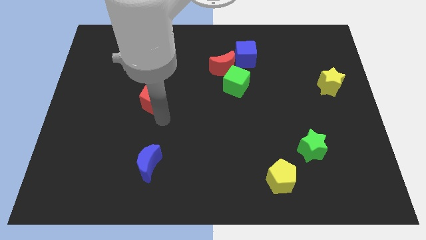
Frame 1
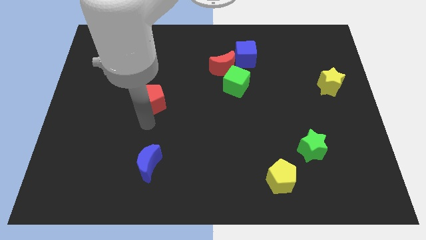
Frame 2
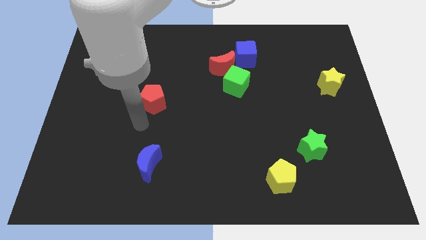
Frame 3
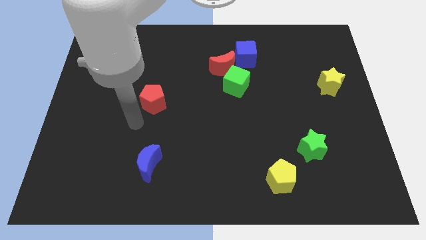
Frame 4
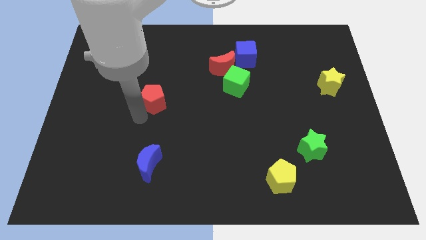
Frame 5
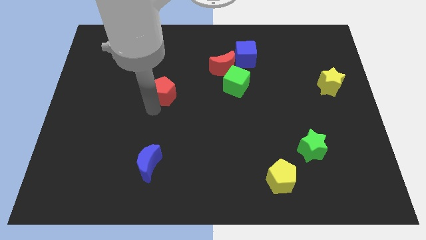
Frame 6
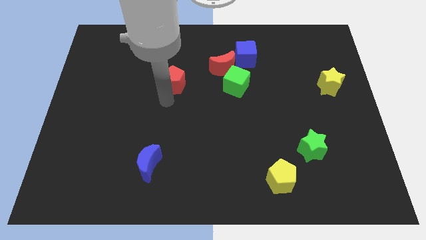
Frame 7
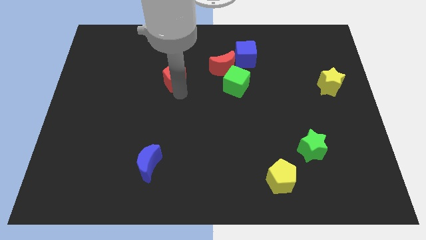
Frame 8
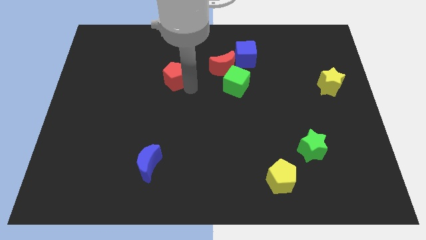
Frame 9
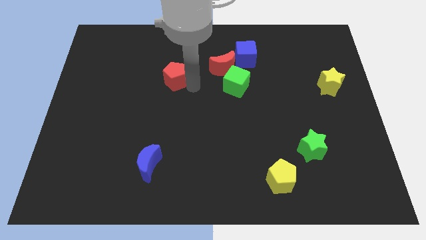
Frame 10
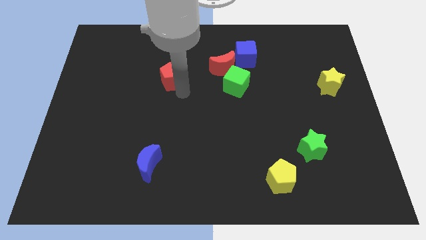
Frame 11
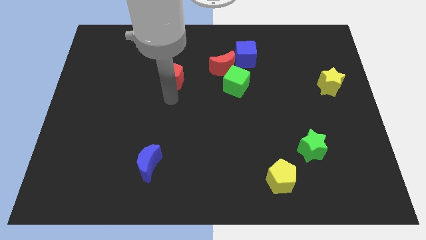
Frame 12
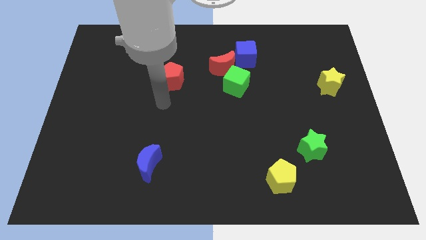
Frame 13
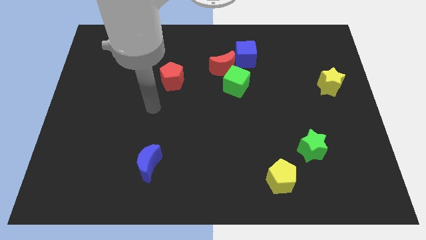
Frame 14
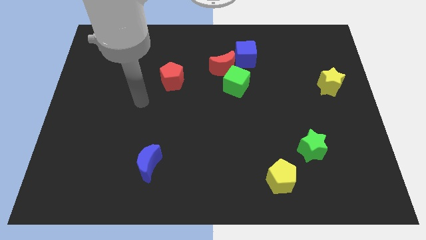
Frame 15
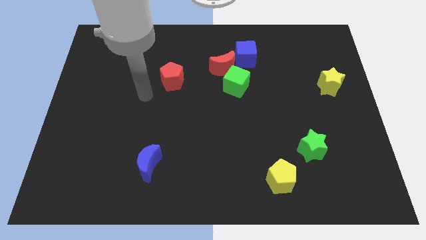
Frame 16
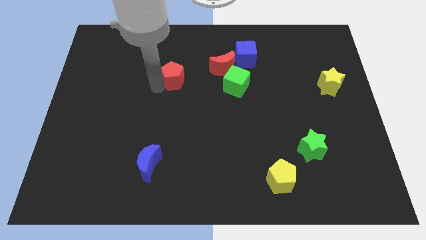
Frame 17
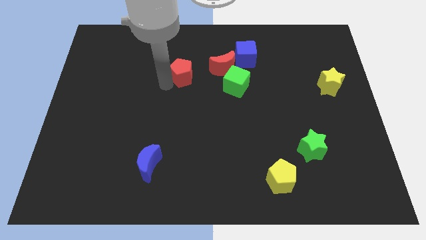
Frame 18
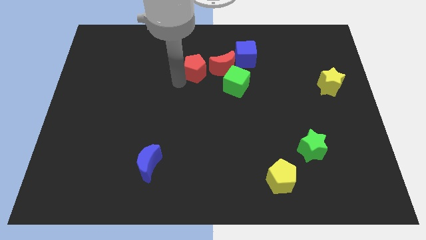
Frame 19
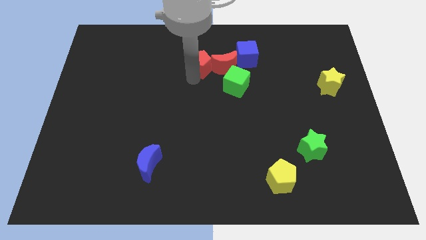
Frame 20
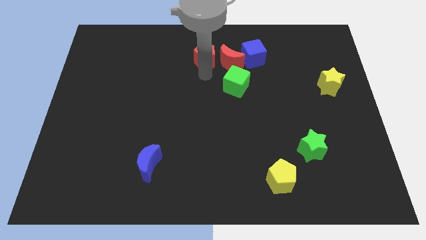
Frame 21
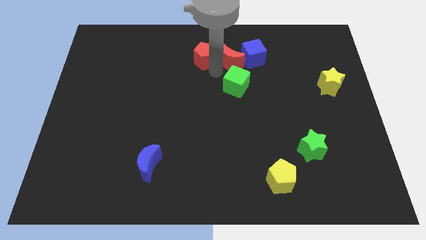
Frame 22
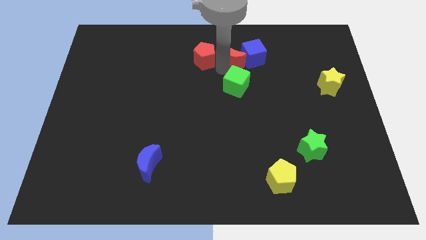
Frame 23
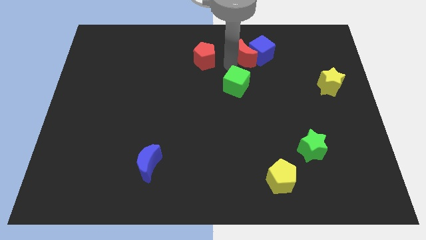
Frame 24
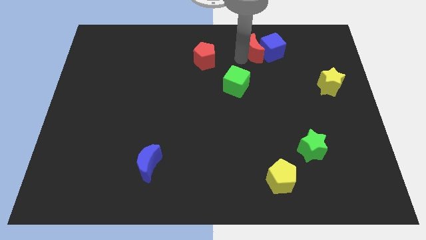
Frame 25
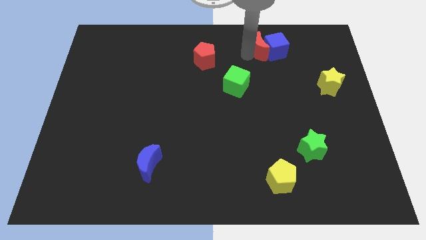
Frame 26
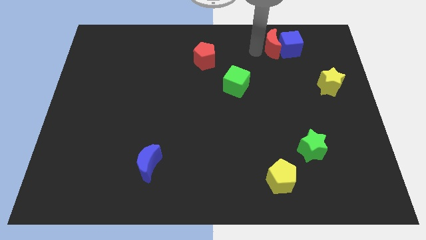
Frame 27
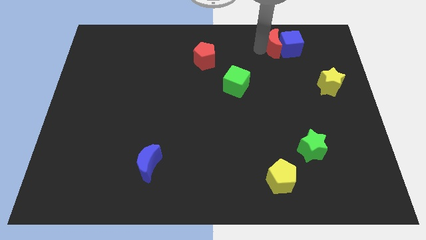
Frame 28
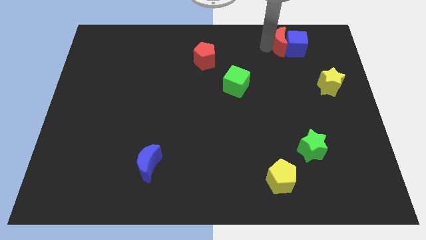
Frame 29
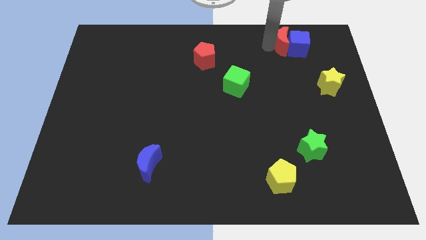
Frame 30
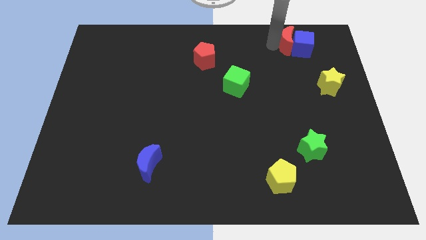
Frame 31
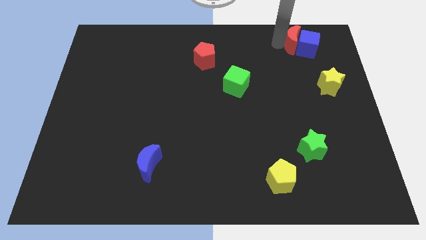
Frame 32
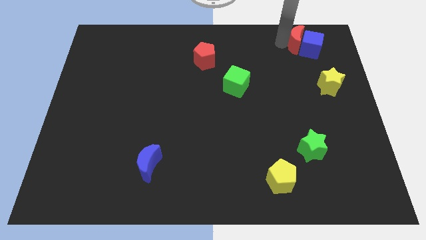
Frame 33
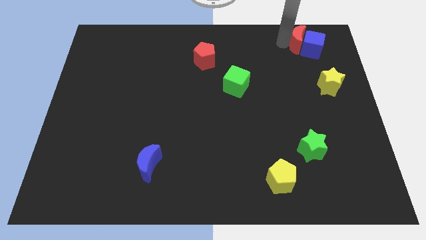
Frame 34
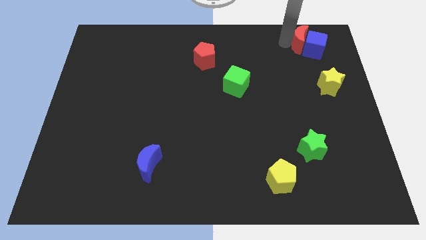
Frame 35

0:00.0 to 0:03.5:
move red moon to the blue cube

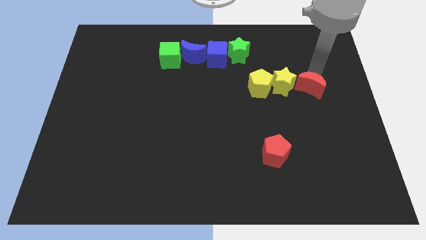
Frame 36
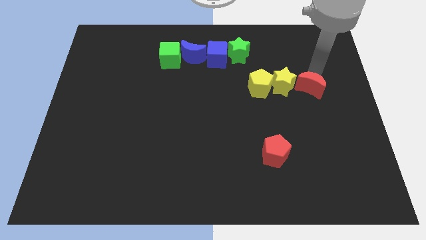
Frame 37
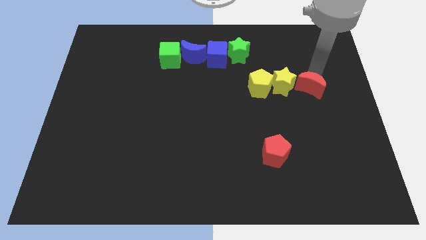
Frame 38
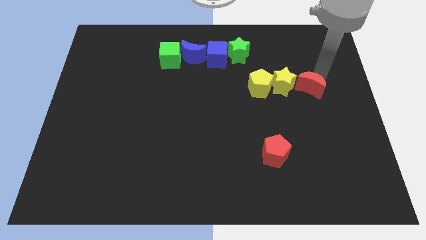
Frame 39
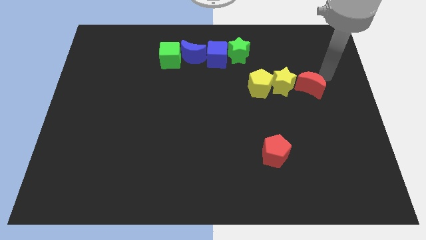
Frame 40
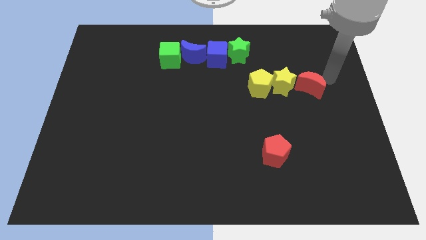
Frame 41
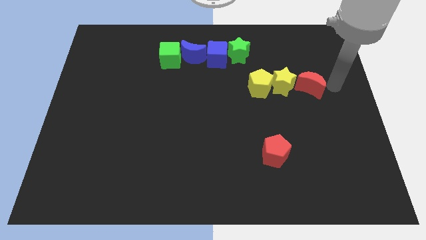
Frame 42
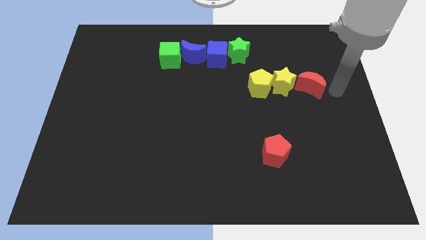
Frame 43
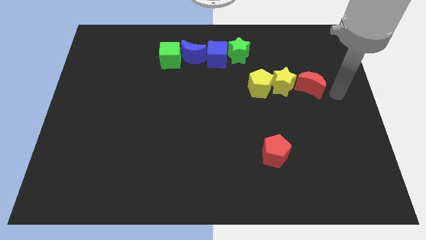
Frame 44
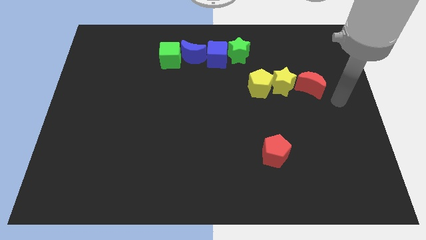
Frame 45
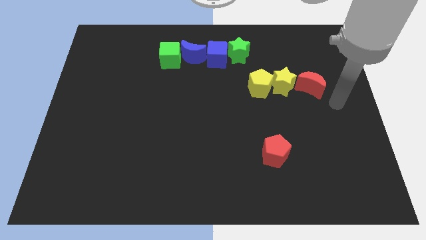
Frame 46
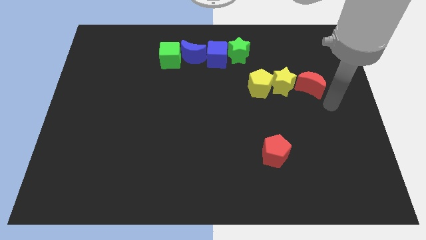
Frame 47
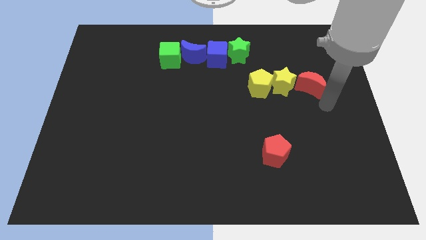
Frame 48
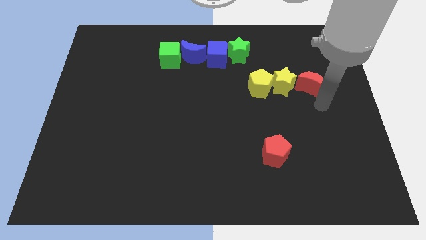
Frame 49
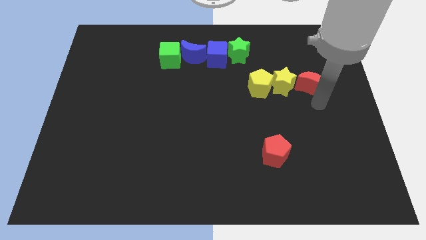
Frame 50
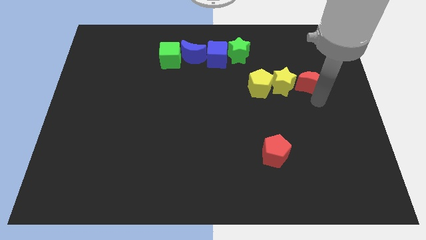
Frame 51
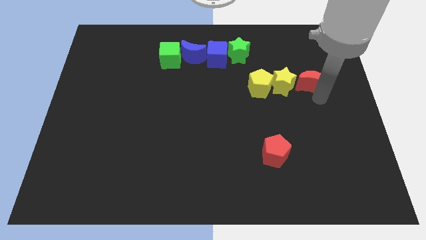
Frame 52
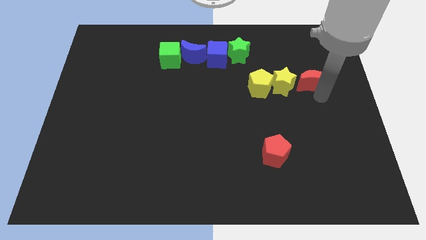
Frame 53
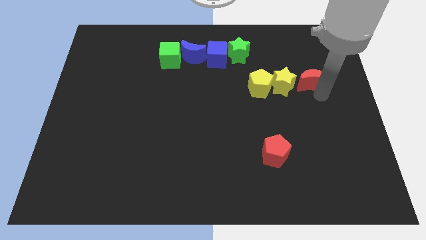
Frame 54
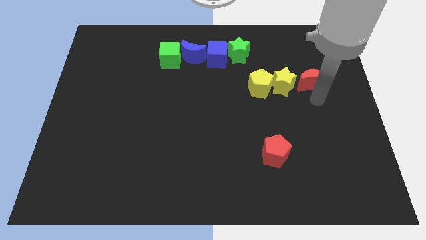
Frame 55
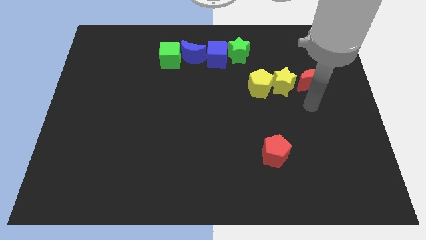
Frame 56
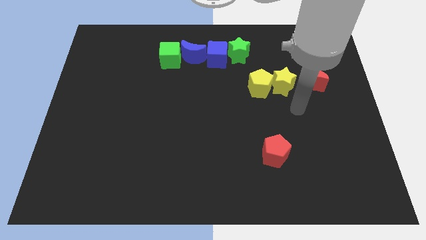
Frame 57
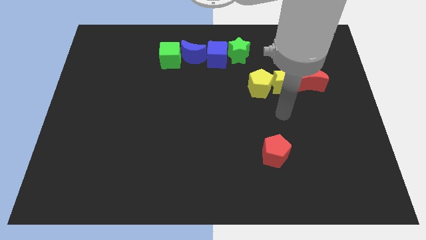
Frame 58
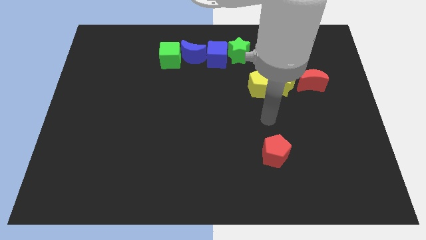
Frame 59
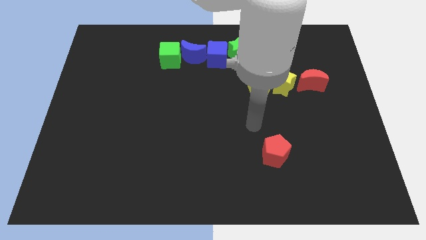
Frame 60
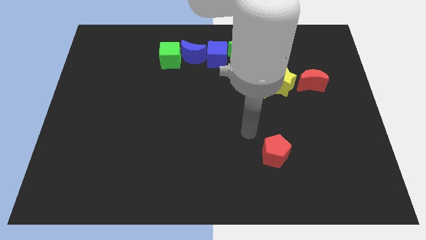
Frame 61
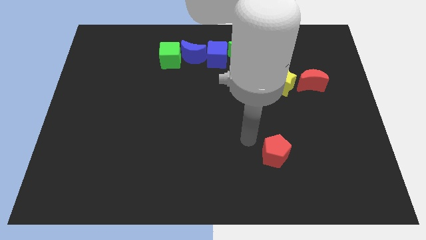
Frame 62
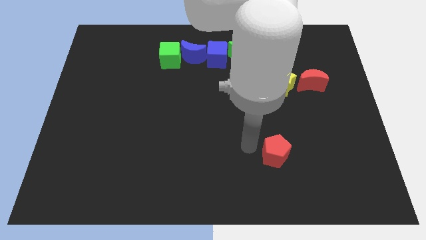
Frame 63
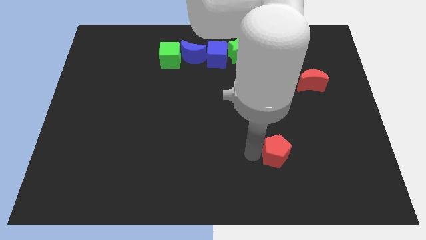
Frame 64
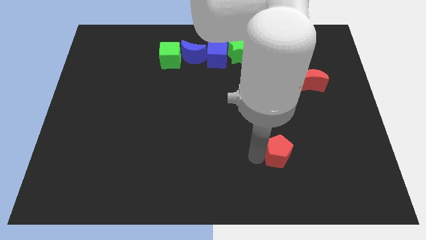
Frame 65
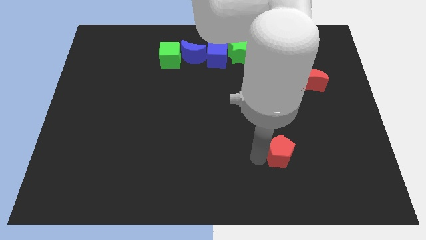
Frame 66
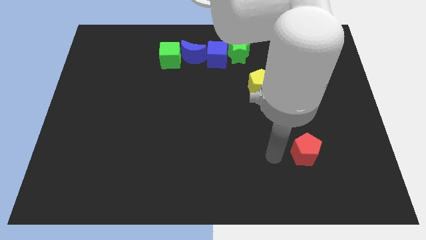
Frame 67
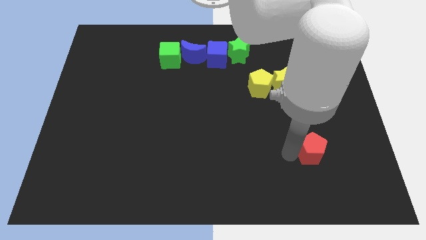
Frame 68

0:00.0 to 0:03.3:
move your arm away from red crescent

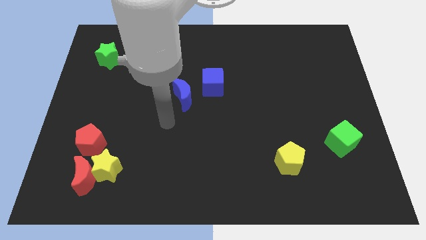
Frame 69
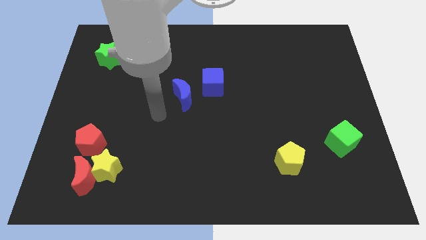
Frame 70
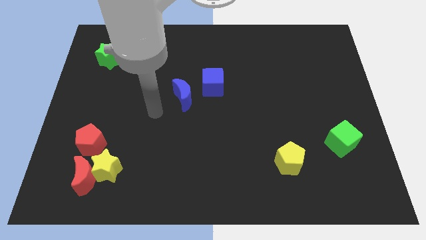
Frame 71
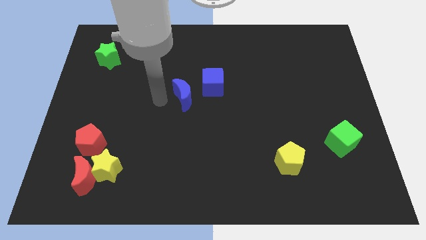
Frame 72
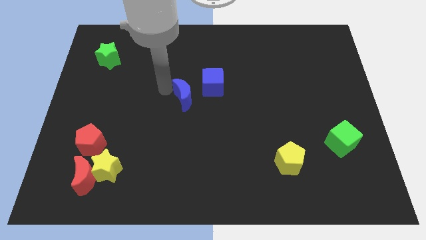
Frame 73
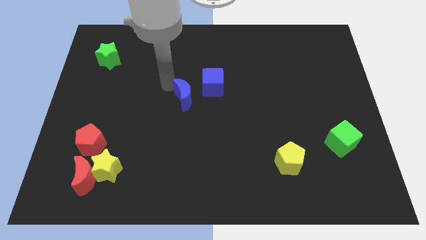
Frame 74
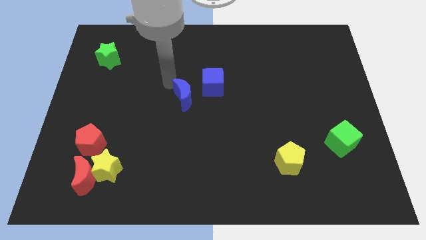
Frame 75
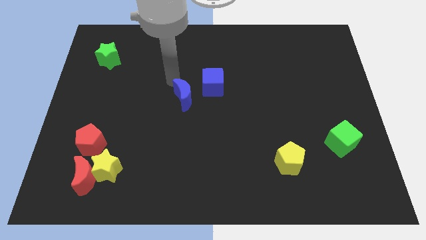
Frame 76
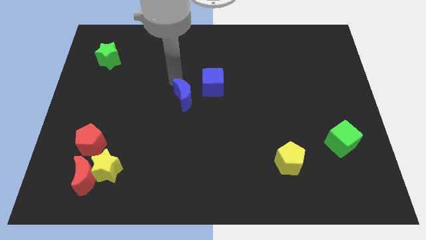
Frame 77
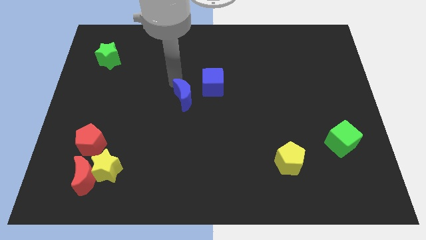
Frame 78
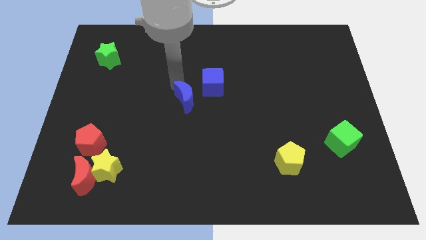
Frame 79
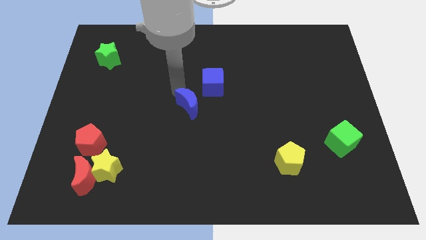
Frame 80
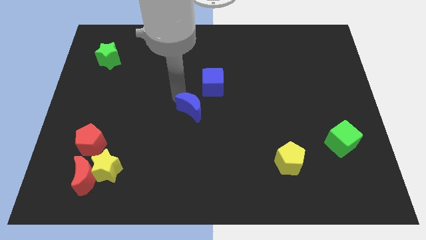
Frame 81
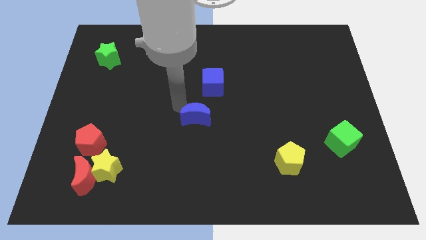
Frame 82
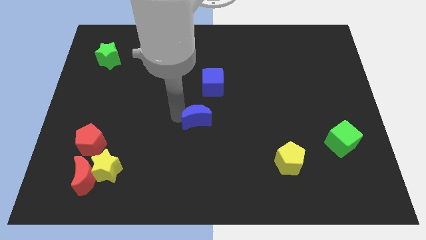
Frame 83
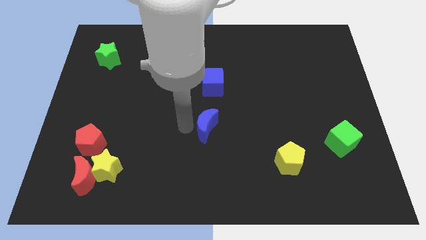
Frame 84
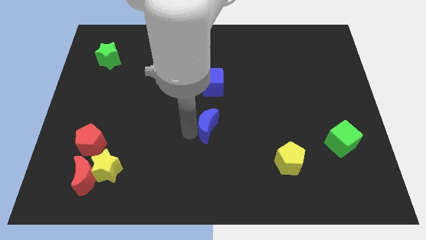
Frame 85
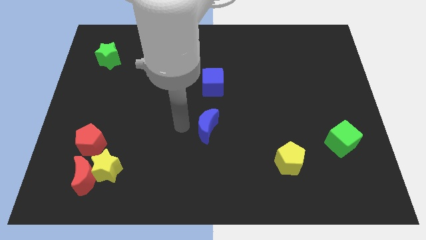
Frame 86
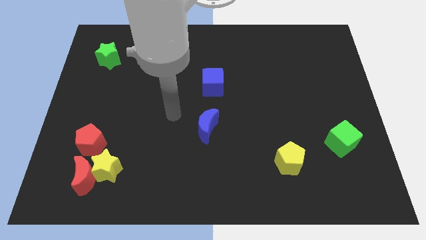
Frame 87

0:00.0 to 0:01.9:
push the blue moon below to the blue cube
